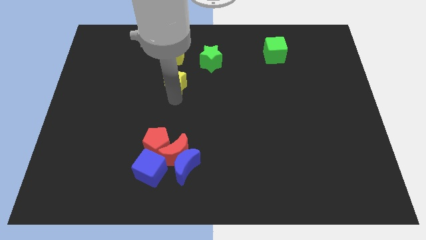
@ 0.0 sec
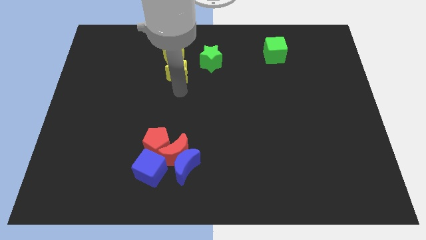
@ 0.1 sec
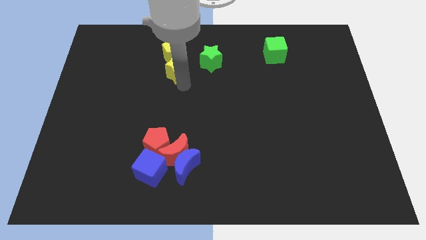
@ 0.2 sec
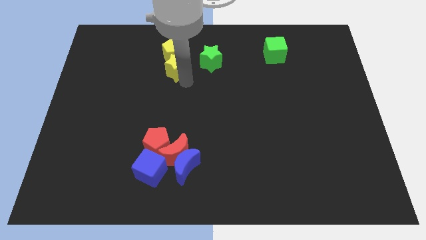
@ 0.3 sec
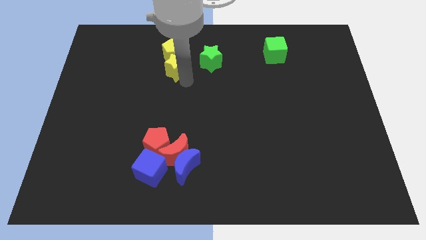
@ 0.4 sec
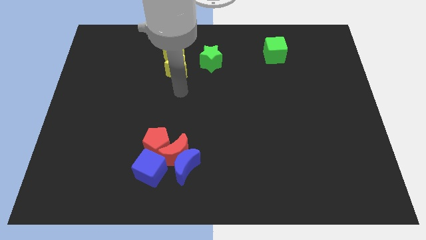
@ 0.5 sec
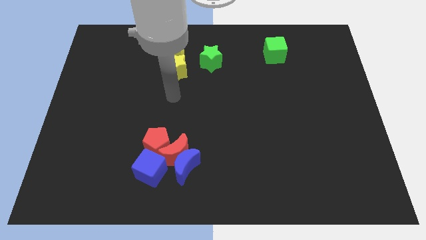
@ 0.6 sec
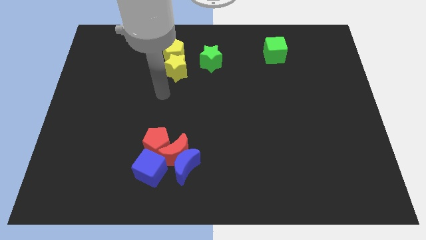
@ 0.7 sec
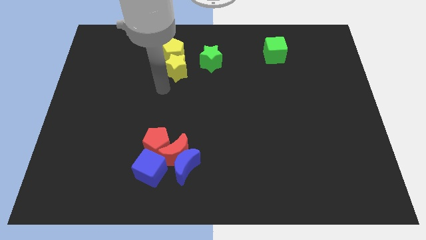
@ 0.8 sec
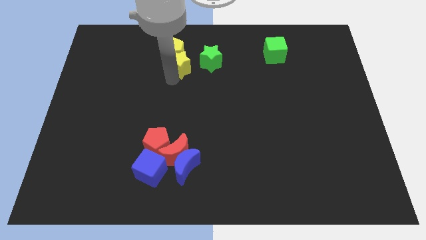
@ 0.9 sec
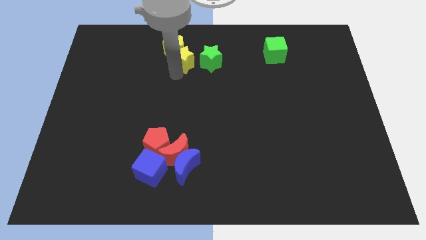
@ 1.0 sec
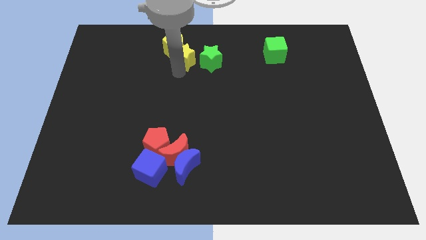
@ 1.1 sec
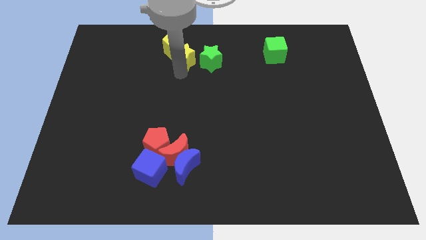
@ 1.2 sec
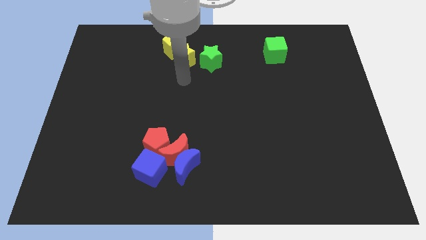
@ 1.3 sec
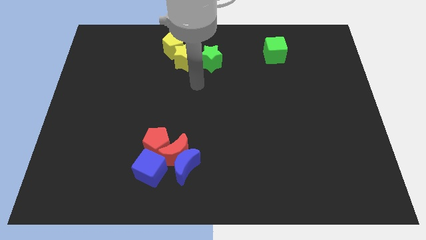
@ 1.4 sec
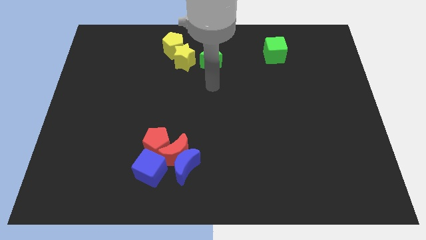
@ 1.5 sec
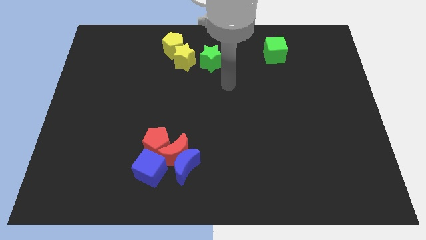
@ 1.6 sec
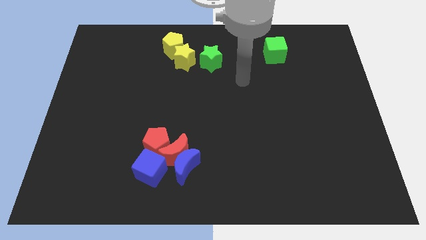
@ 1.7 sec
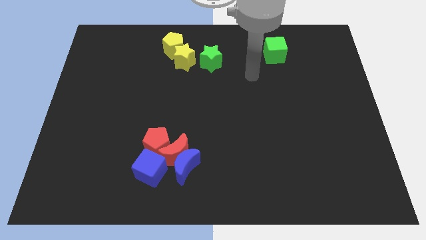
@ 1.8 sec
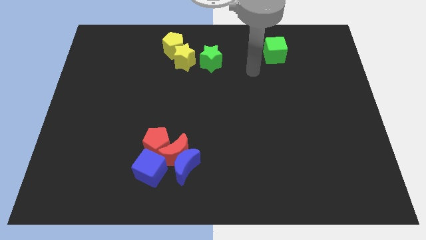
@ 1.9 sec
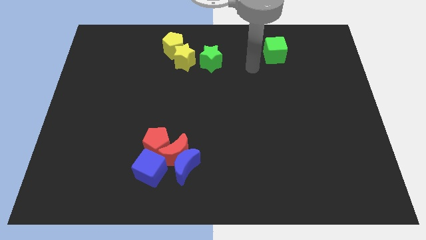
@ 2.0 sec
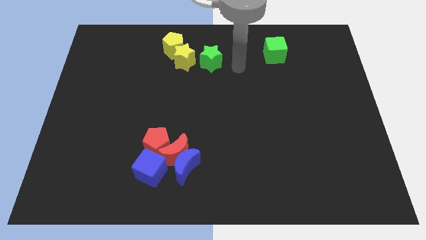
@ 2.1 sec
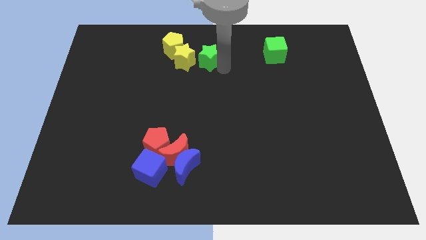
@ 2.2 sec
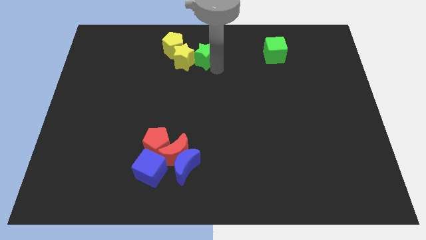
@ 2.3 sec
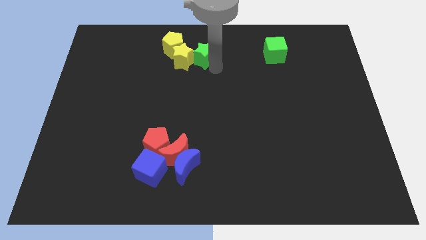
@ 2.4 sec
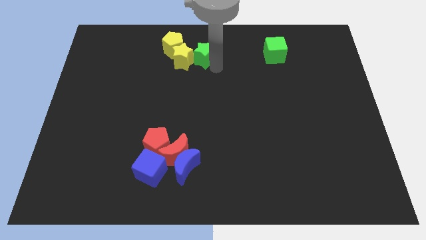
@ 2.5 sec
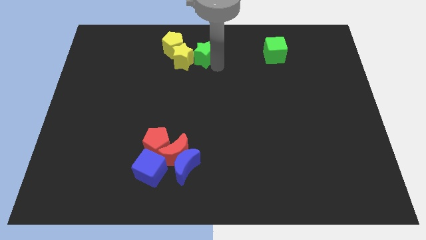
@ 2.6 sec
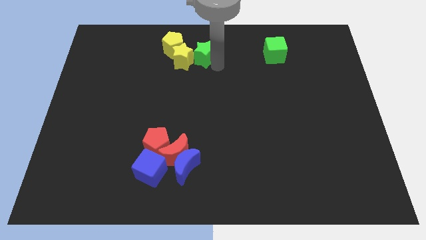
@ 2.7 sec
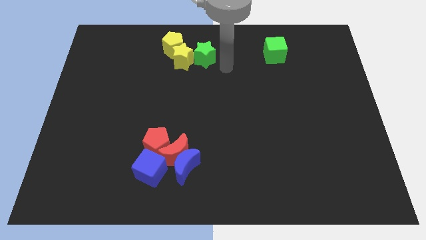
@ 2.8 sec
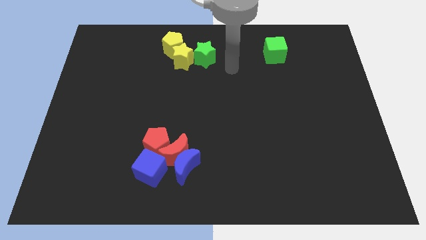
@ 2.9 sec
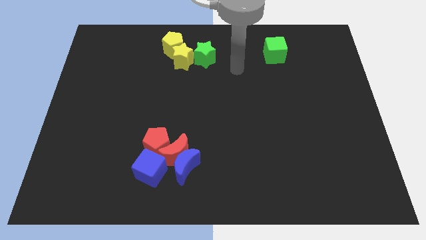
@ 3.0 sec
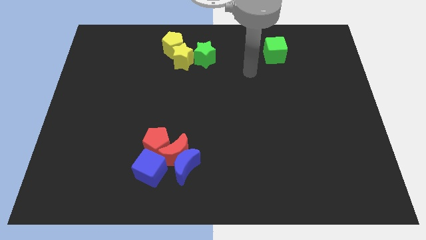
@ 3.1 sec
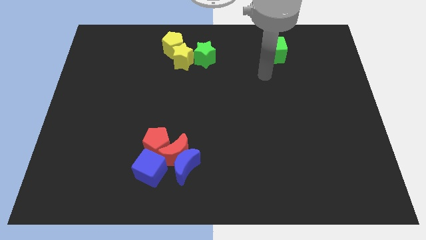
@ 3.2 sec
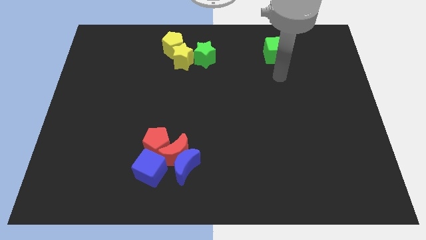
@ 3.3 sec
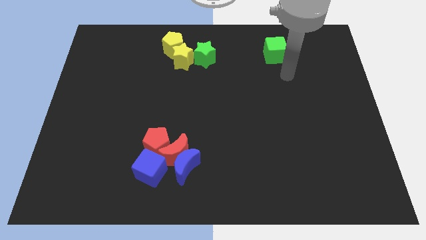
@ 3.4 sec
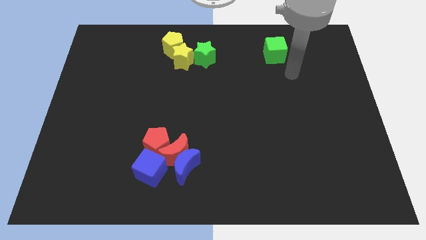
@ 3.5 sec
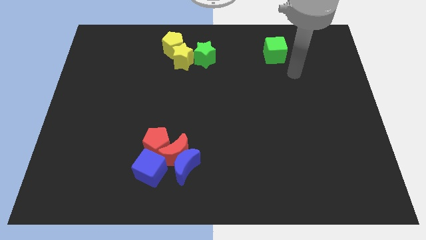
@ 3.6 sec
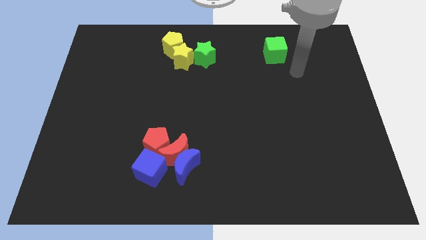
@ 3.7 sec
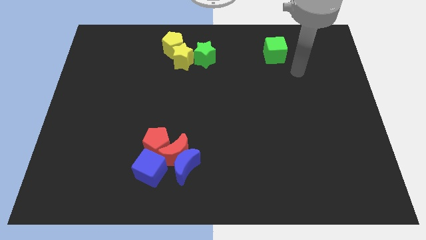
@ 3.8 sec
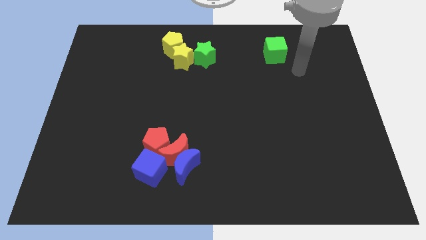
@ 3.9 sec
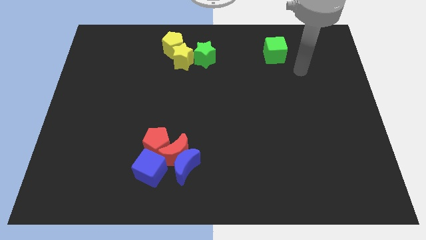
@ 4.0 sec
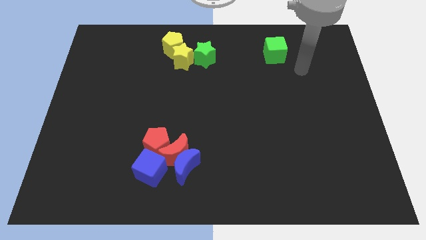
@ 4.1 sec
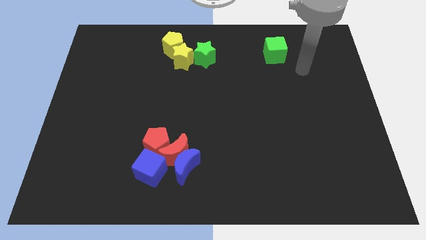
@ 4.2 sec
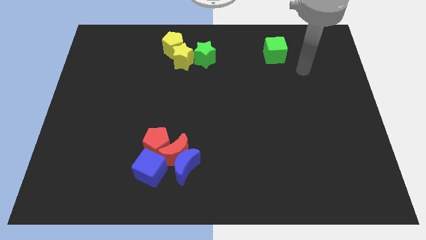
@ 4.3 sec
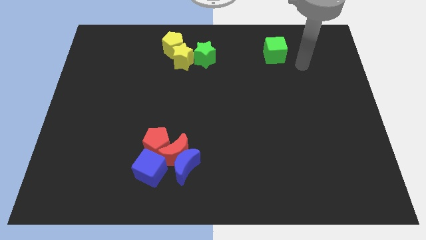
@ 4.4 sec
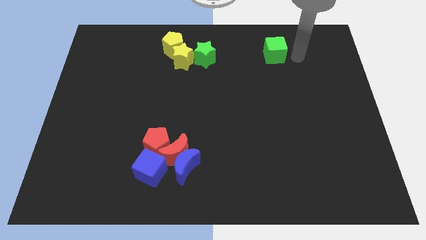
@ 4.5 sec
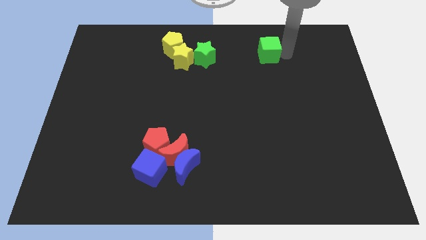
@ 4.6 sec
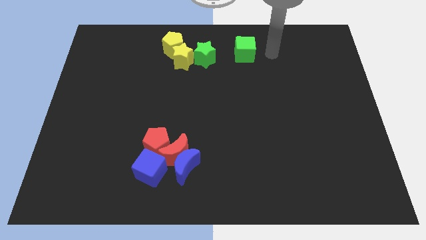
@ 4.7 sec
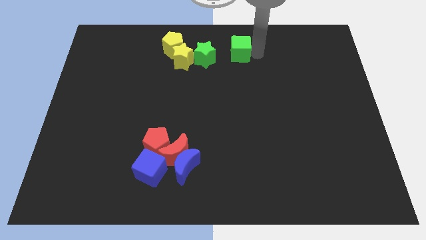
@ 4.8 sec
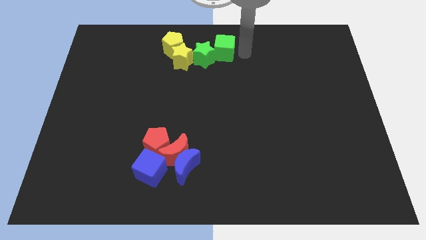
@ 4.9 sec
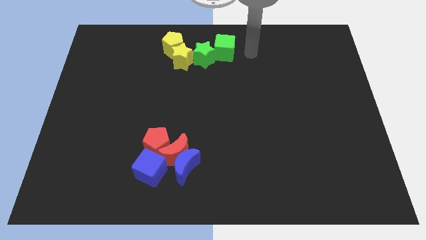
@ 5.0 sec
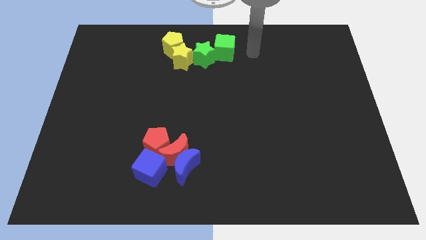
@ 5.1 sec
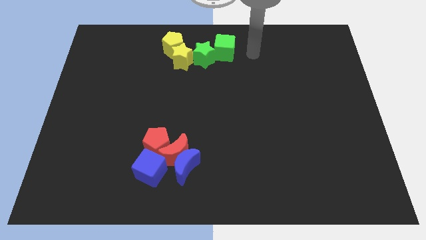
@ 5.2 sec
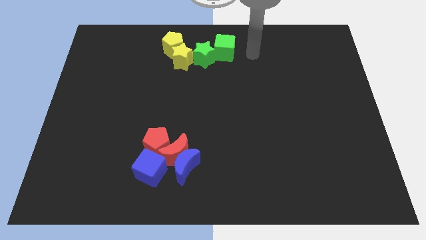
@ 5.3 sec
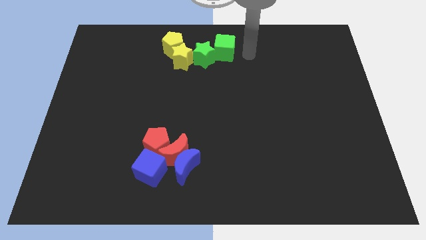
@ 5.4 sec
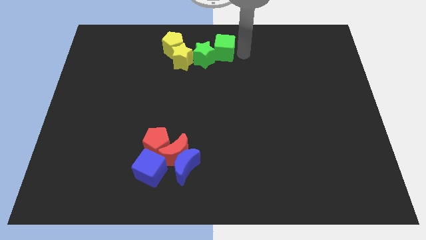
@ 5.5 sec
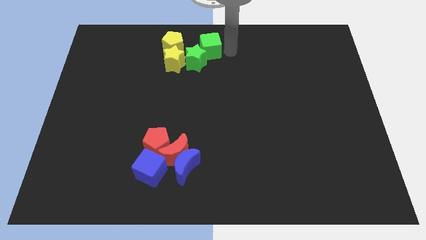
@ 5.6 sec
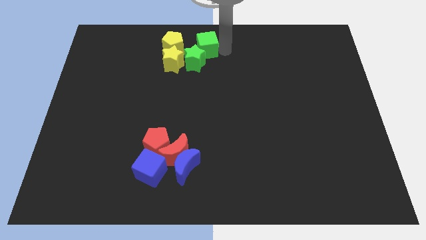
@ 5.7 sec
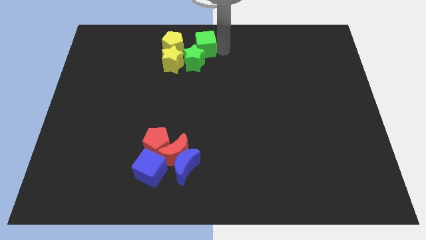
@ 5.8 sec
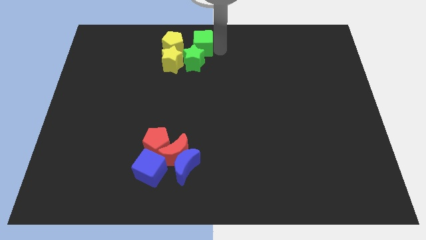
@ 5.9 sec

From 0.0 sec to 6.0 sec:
move green blocks and yellow blocks together

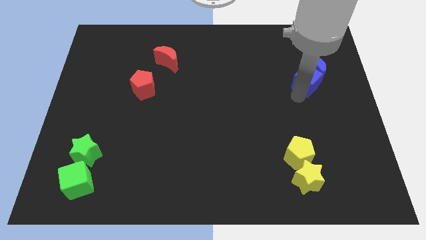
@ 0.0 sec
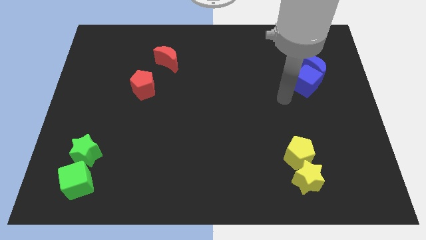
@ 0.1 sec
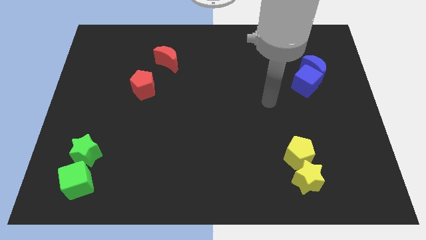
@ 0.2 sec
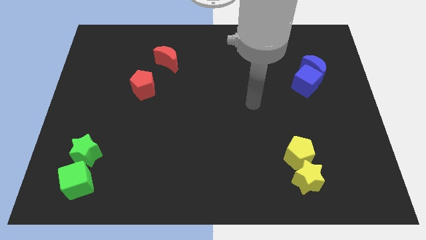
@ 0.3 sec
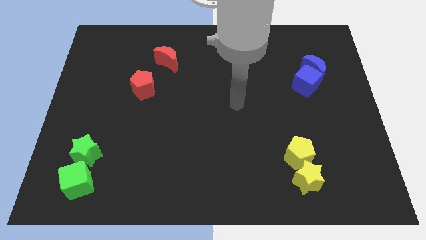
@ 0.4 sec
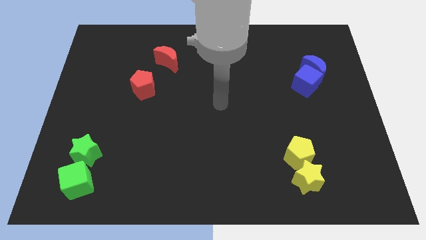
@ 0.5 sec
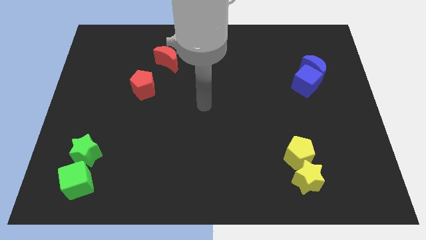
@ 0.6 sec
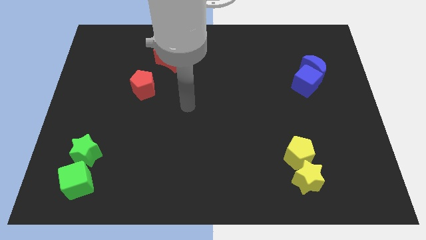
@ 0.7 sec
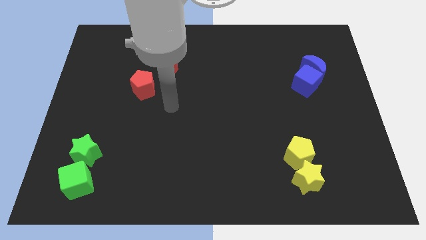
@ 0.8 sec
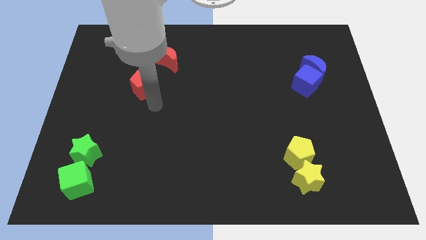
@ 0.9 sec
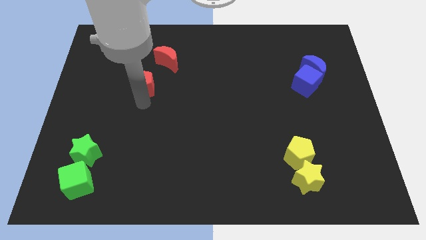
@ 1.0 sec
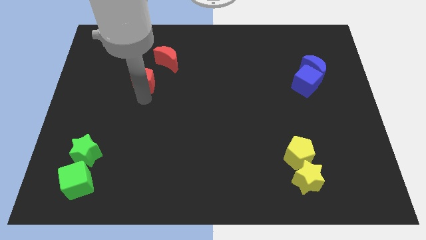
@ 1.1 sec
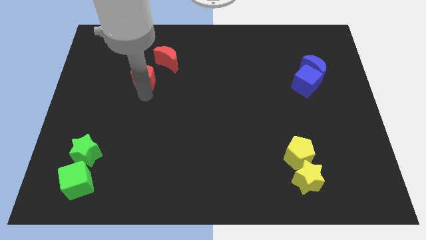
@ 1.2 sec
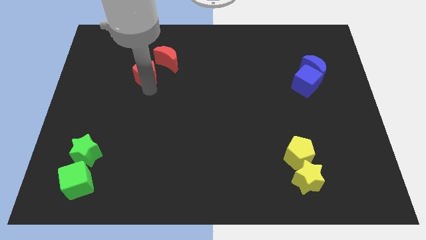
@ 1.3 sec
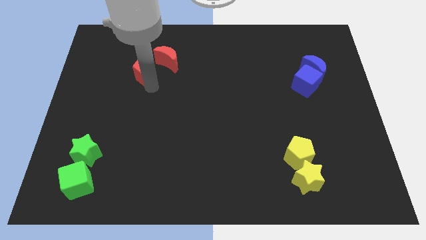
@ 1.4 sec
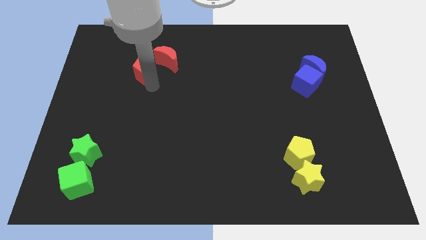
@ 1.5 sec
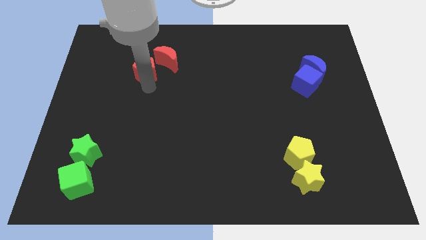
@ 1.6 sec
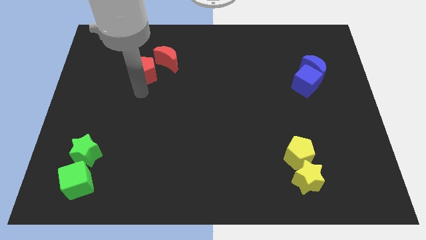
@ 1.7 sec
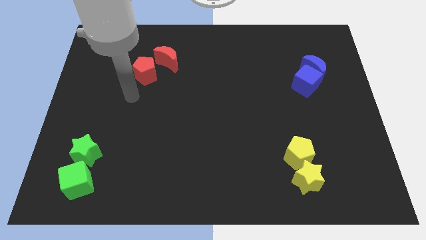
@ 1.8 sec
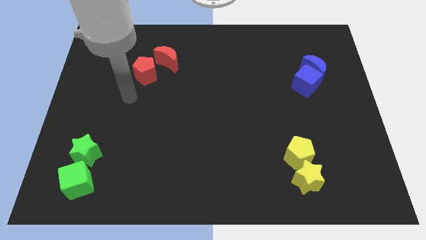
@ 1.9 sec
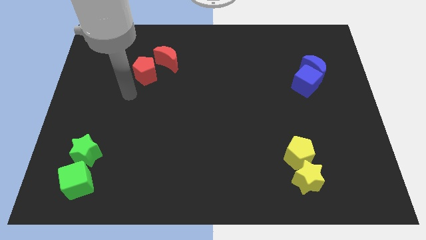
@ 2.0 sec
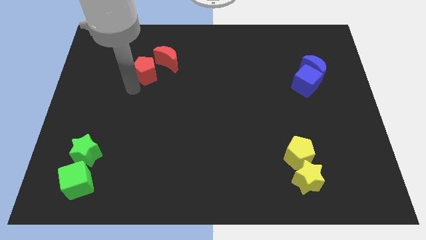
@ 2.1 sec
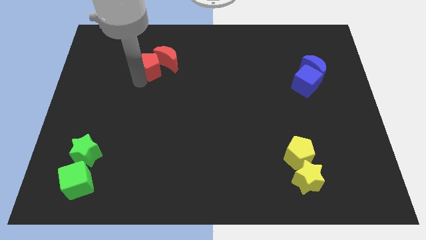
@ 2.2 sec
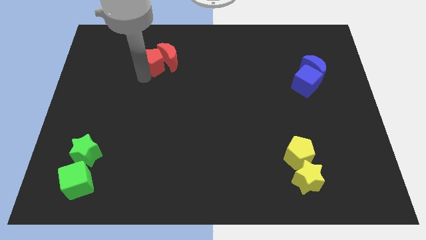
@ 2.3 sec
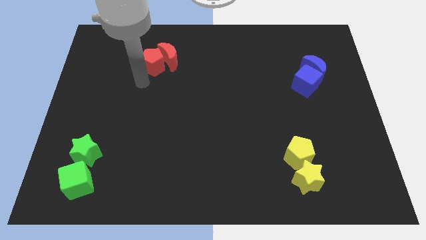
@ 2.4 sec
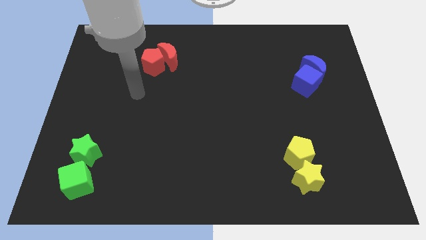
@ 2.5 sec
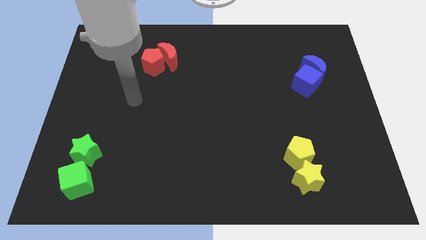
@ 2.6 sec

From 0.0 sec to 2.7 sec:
slide the red pentagon into the red moon

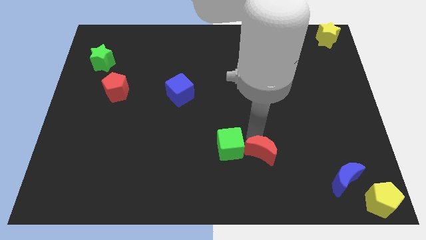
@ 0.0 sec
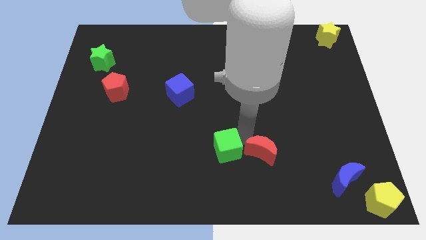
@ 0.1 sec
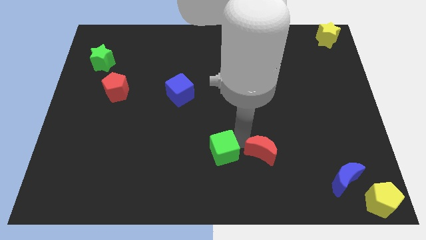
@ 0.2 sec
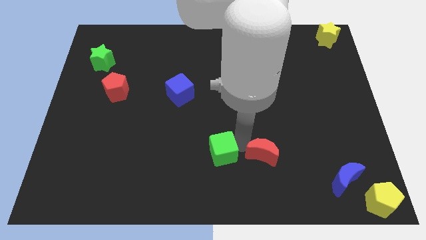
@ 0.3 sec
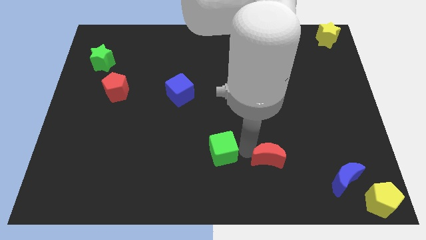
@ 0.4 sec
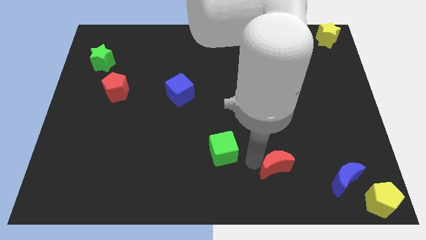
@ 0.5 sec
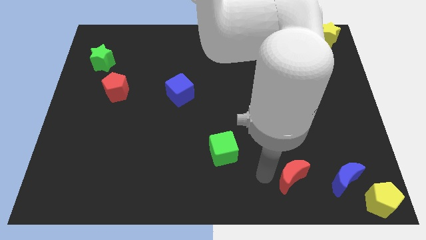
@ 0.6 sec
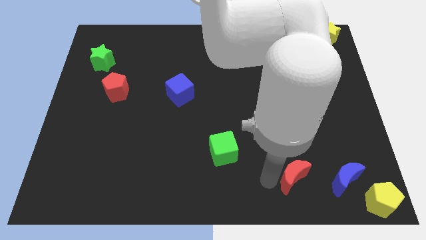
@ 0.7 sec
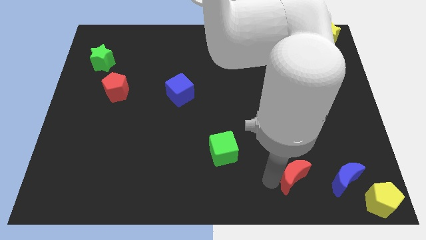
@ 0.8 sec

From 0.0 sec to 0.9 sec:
separate the red crescent and green cube
